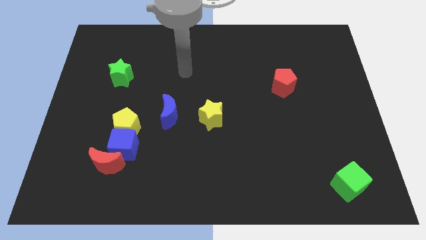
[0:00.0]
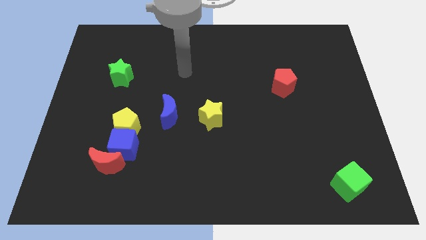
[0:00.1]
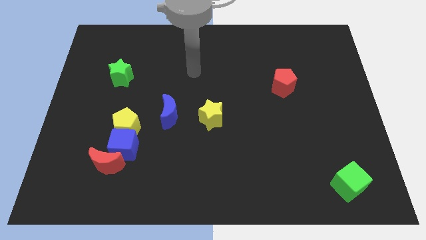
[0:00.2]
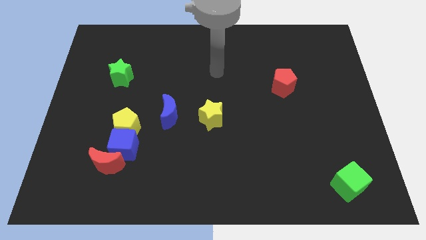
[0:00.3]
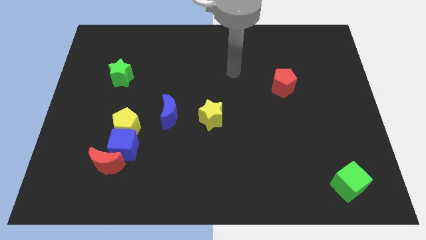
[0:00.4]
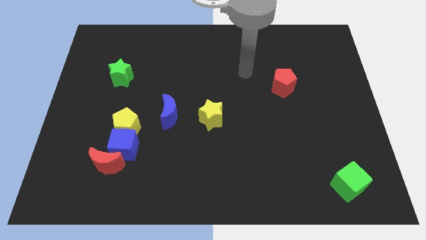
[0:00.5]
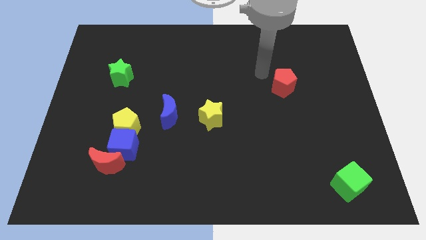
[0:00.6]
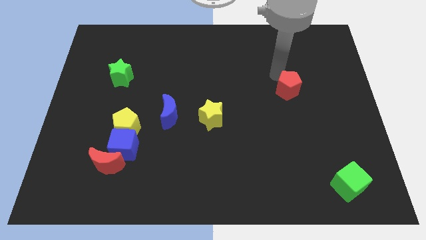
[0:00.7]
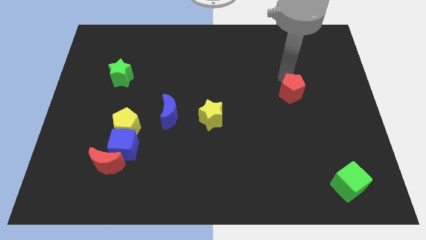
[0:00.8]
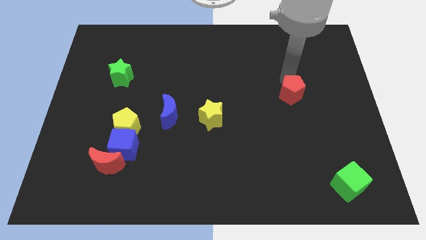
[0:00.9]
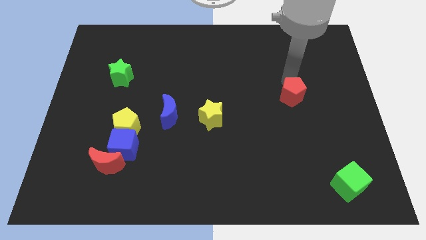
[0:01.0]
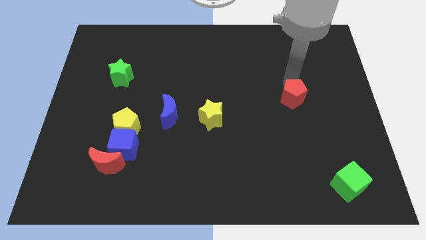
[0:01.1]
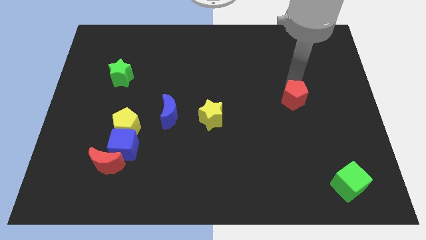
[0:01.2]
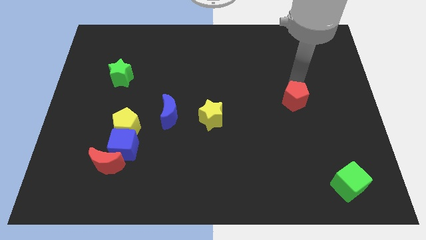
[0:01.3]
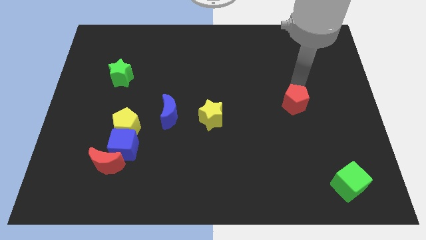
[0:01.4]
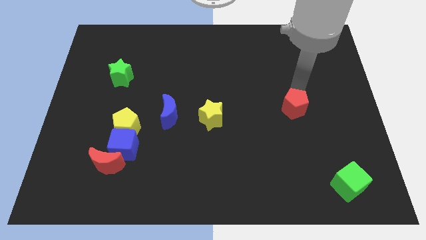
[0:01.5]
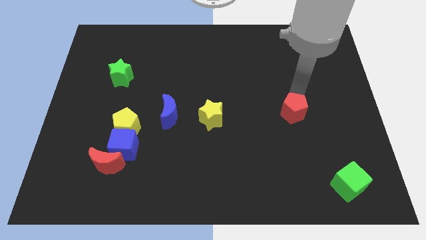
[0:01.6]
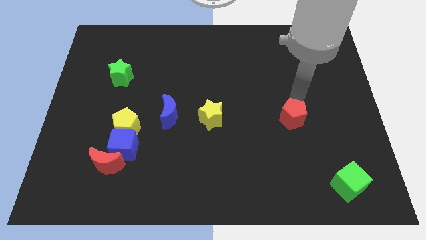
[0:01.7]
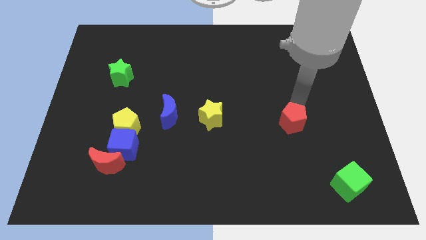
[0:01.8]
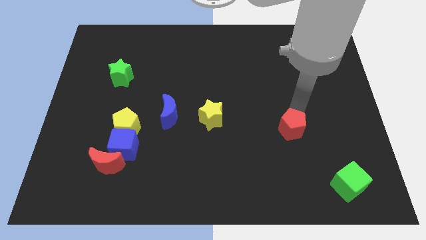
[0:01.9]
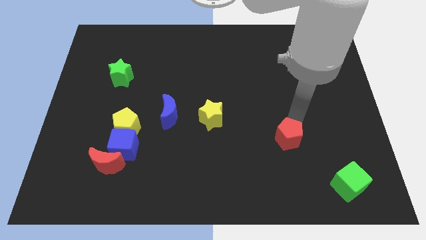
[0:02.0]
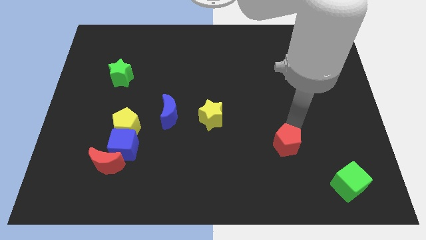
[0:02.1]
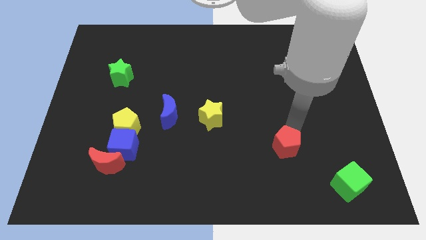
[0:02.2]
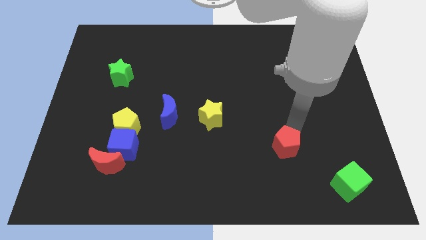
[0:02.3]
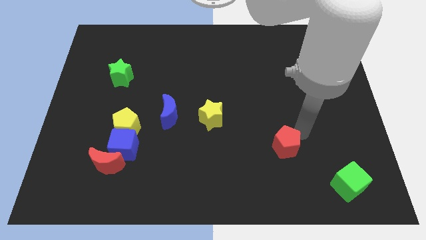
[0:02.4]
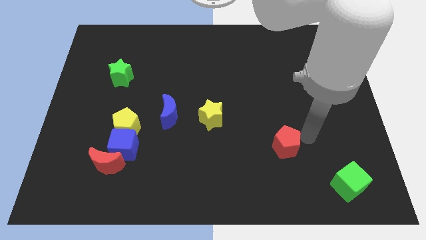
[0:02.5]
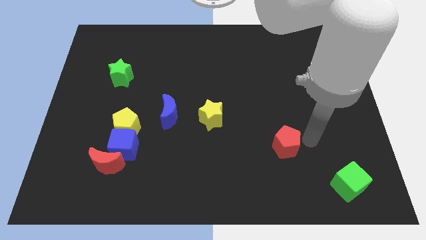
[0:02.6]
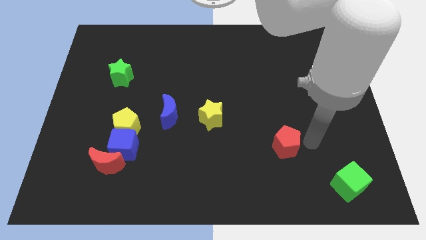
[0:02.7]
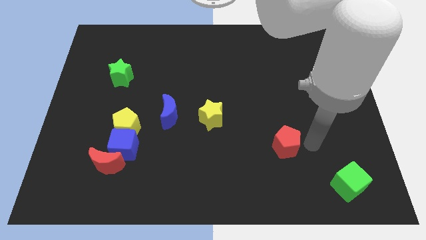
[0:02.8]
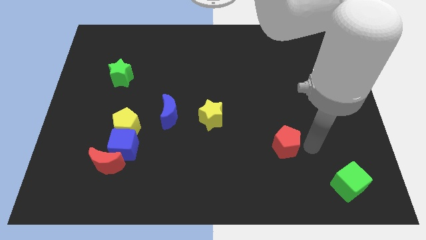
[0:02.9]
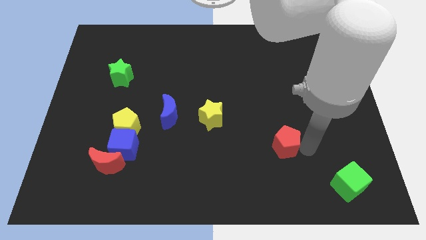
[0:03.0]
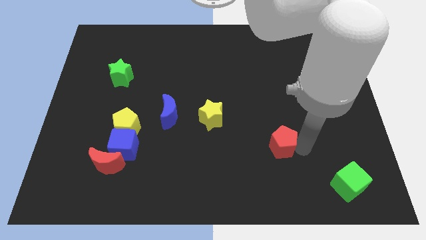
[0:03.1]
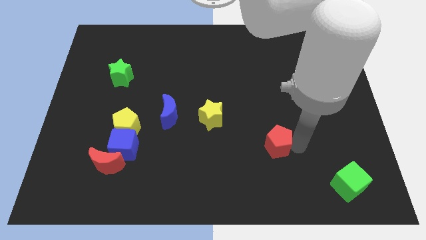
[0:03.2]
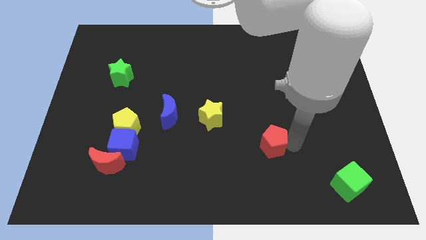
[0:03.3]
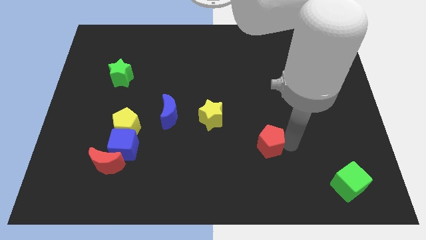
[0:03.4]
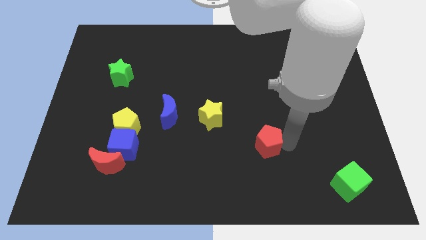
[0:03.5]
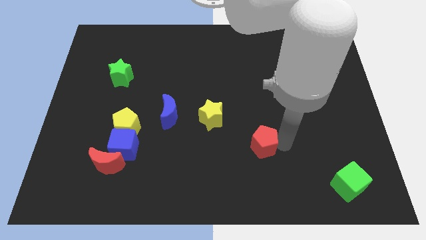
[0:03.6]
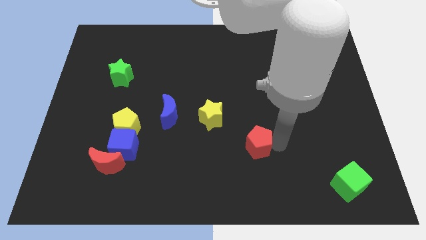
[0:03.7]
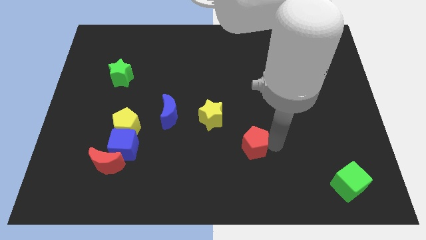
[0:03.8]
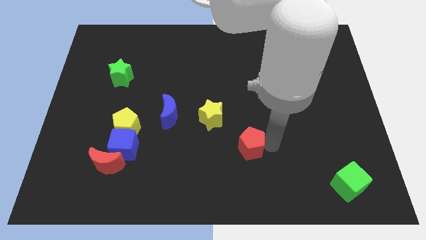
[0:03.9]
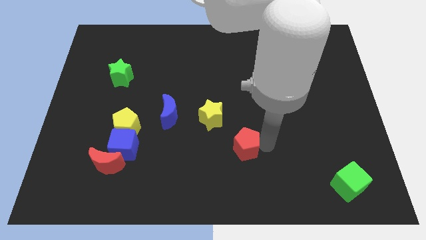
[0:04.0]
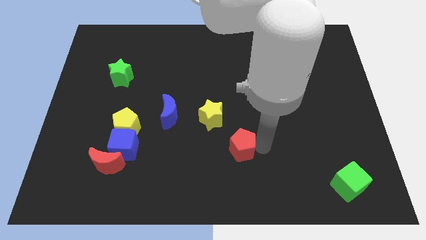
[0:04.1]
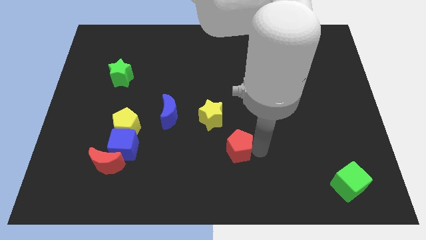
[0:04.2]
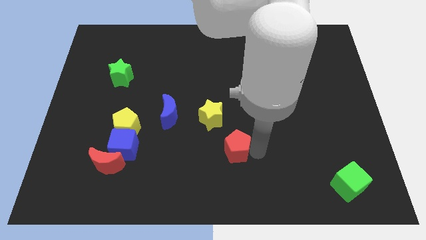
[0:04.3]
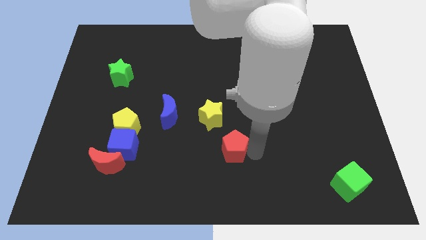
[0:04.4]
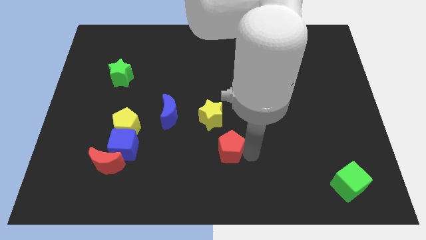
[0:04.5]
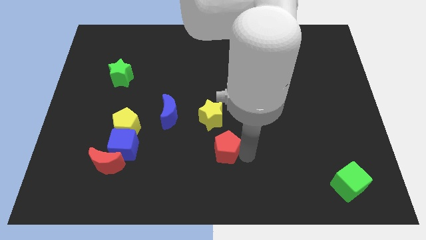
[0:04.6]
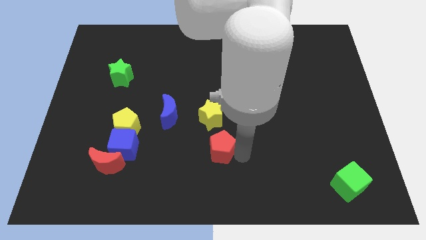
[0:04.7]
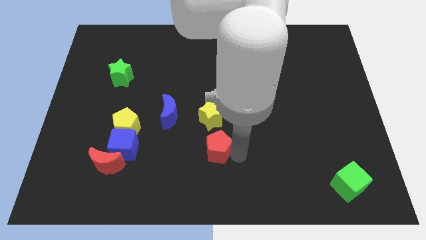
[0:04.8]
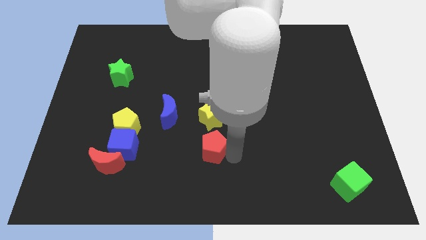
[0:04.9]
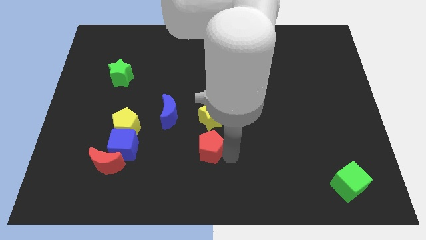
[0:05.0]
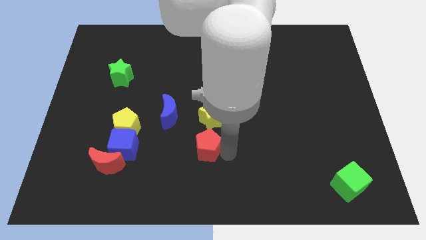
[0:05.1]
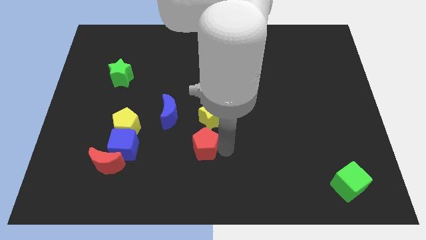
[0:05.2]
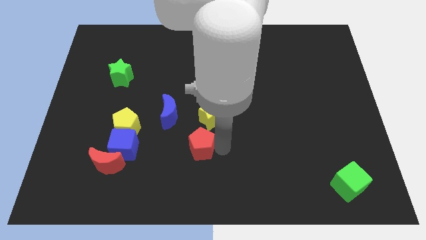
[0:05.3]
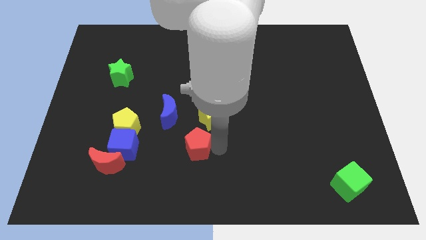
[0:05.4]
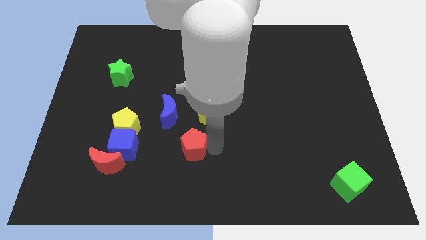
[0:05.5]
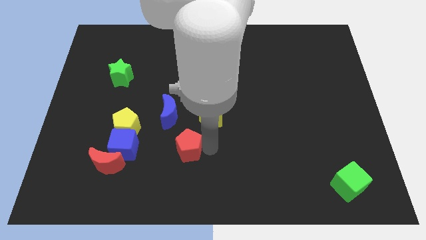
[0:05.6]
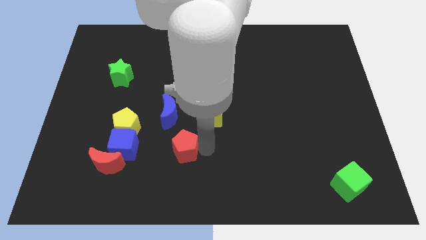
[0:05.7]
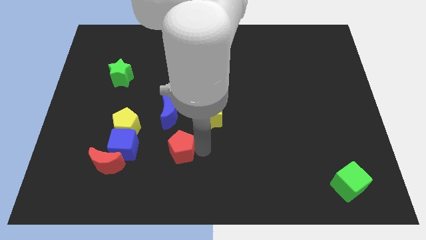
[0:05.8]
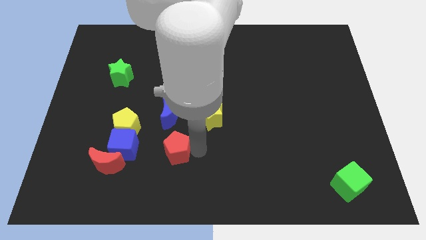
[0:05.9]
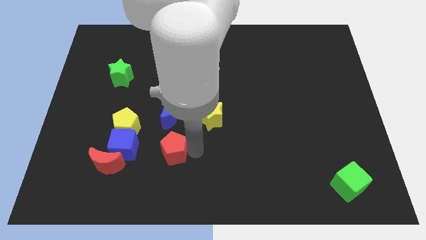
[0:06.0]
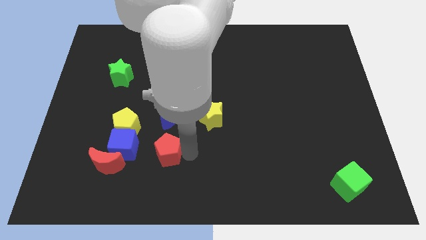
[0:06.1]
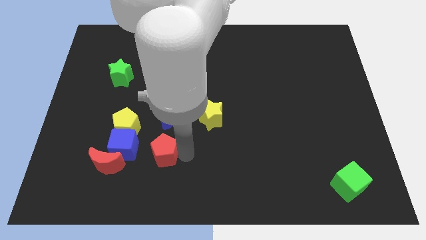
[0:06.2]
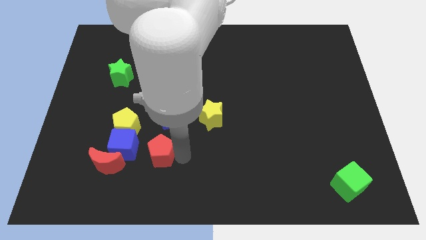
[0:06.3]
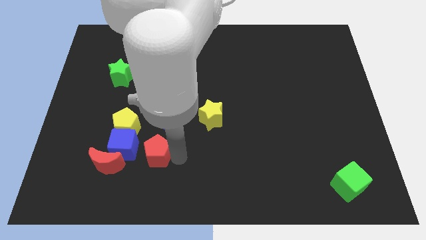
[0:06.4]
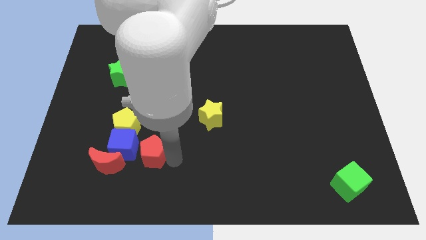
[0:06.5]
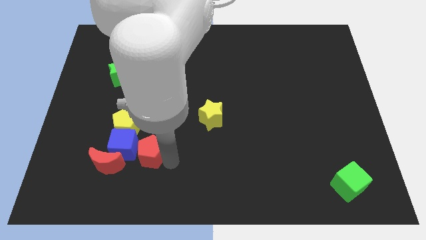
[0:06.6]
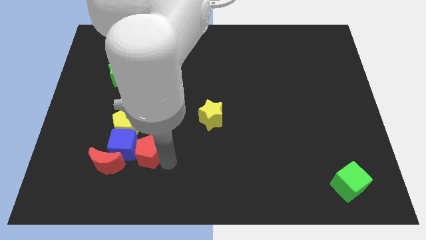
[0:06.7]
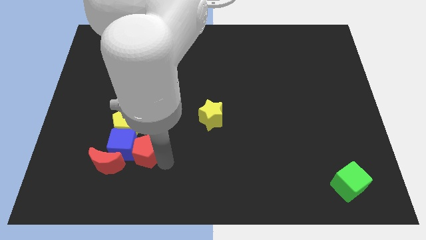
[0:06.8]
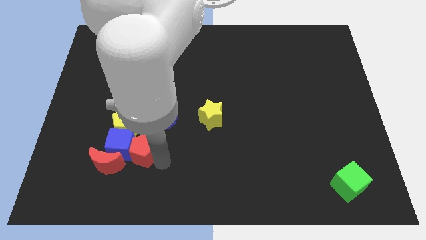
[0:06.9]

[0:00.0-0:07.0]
put the red pentagon next to the blue cube

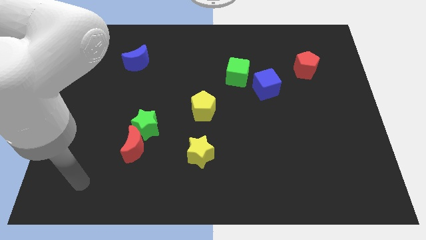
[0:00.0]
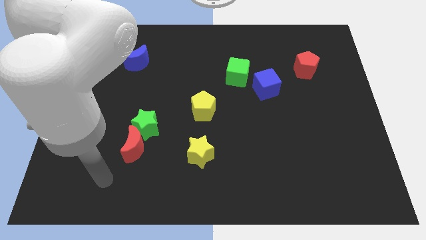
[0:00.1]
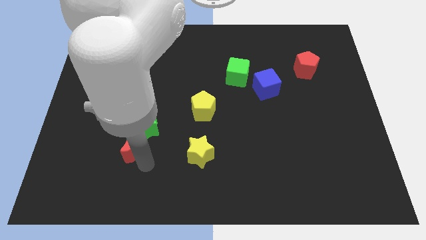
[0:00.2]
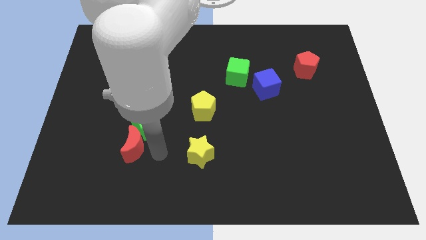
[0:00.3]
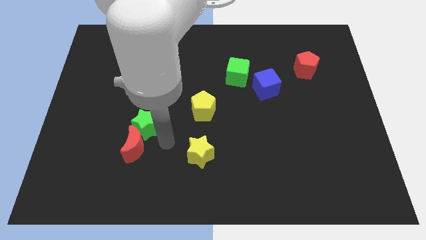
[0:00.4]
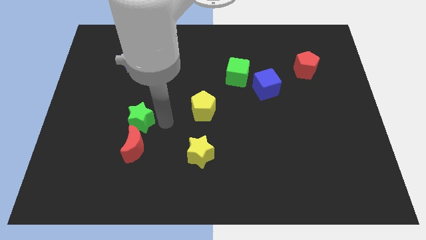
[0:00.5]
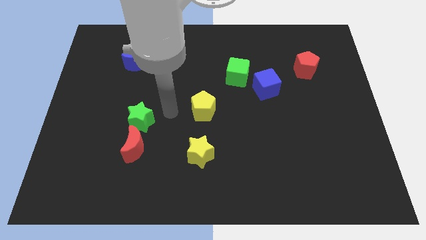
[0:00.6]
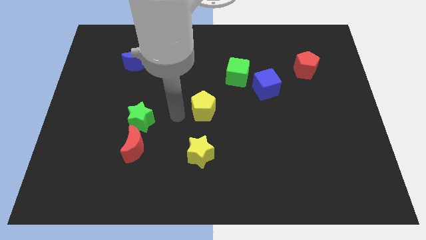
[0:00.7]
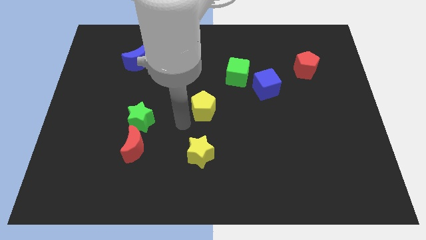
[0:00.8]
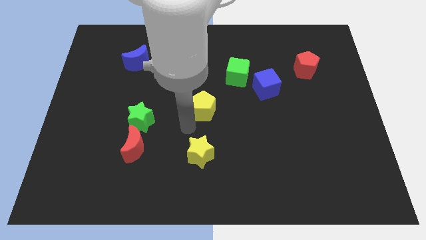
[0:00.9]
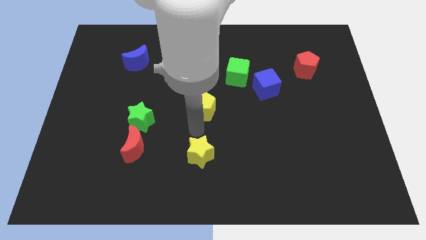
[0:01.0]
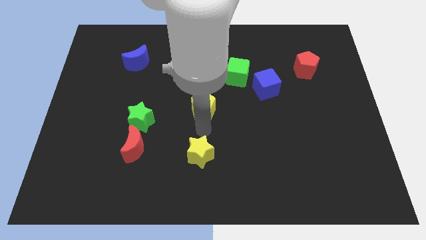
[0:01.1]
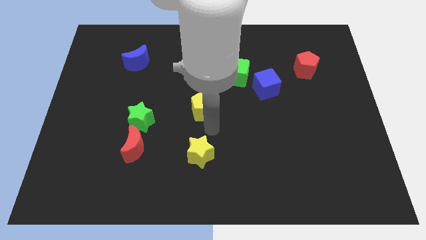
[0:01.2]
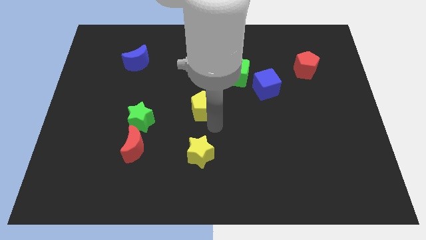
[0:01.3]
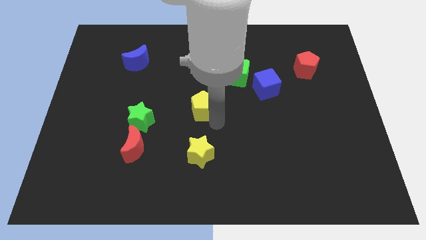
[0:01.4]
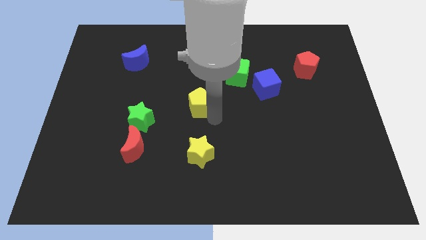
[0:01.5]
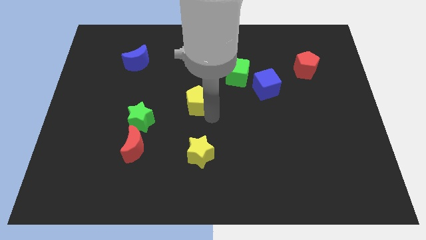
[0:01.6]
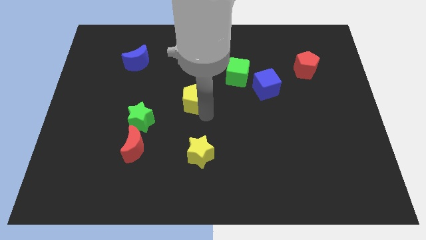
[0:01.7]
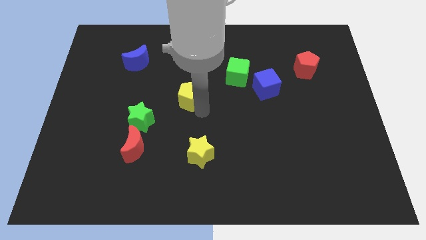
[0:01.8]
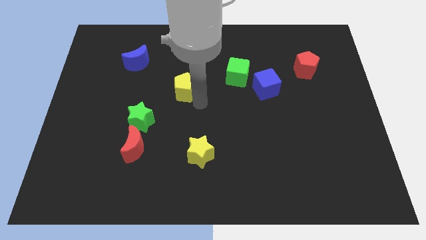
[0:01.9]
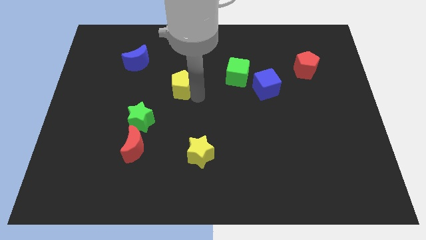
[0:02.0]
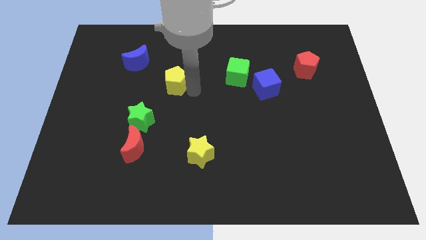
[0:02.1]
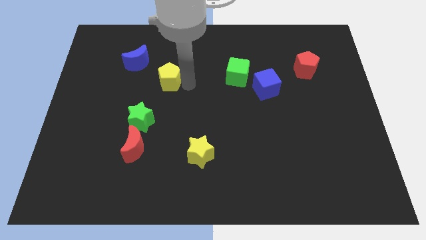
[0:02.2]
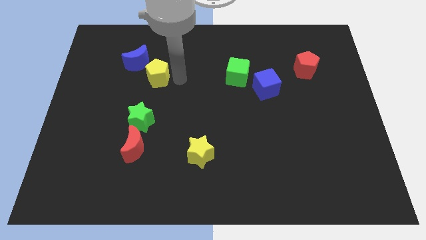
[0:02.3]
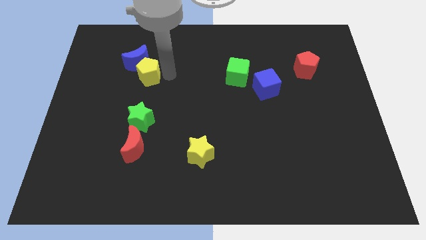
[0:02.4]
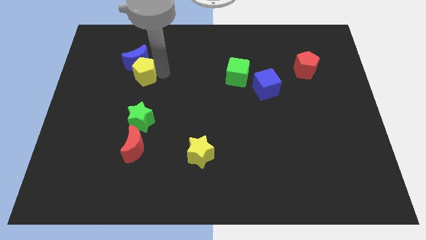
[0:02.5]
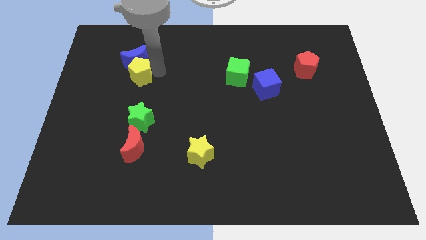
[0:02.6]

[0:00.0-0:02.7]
move the yellow pentagon towards the blue moon
